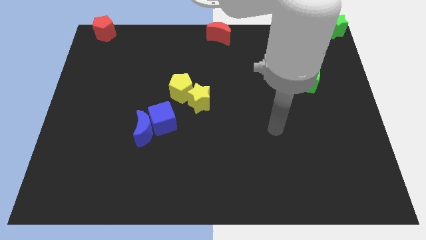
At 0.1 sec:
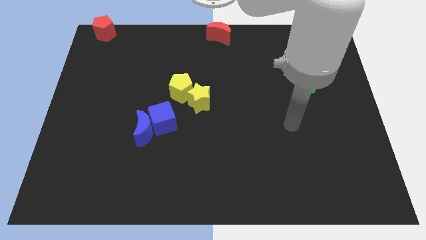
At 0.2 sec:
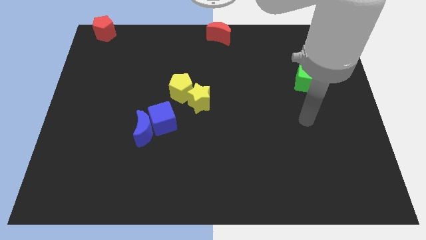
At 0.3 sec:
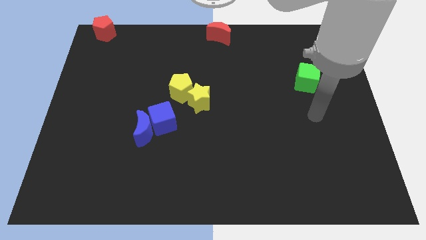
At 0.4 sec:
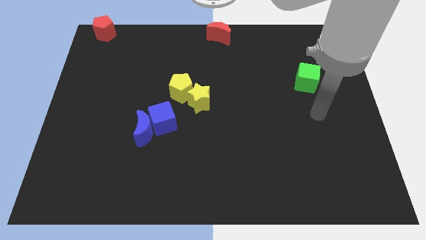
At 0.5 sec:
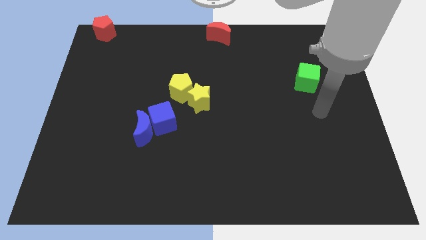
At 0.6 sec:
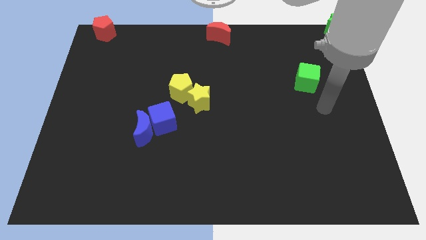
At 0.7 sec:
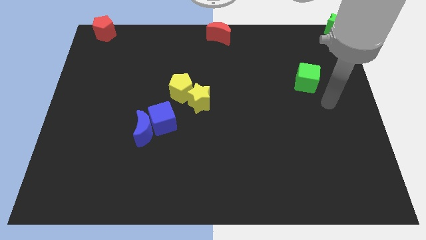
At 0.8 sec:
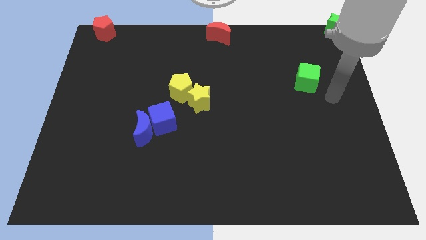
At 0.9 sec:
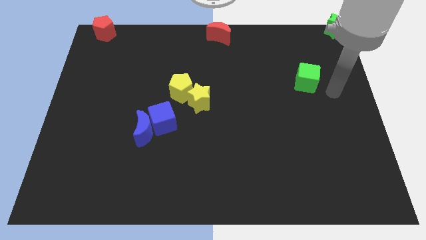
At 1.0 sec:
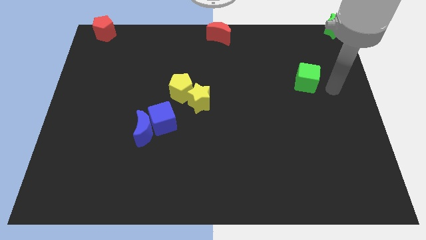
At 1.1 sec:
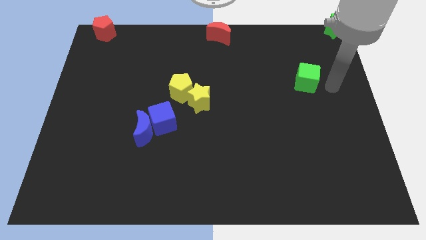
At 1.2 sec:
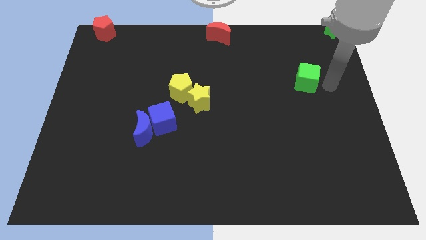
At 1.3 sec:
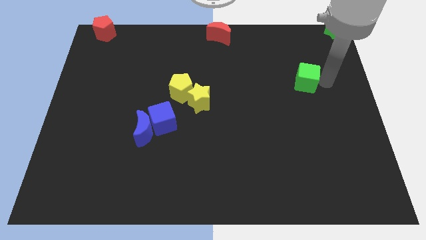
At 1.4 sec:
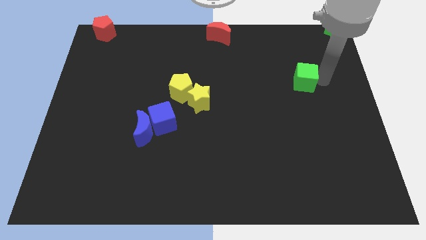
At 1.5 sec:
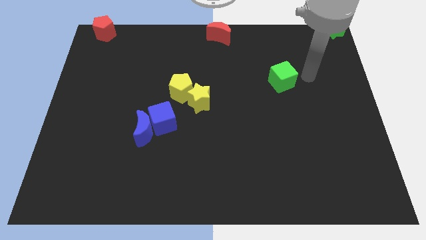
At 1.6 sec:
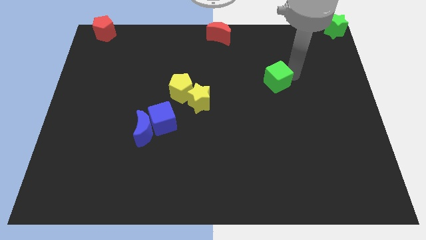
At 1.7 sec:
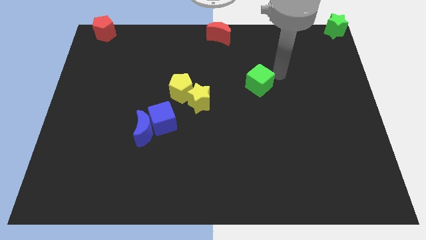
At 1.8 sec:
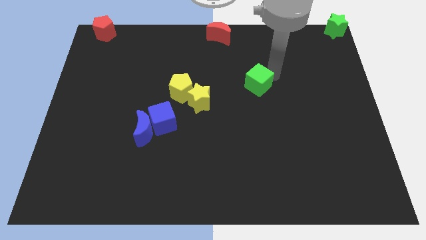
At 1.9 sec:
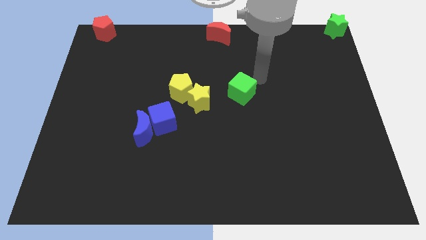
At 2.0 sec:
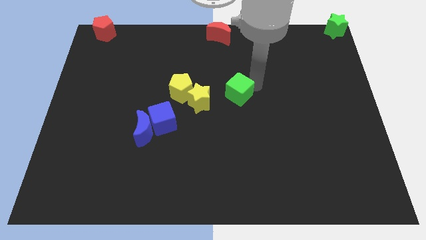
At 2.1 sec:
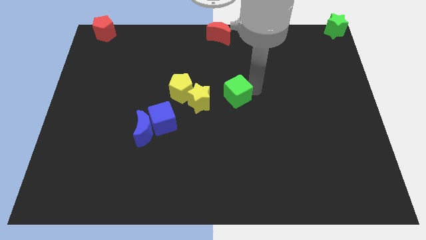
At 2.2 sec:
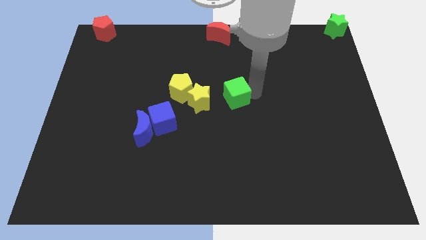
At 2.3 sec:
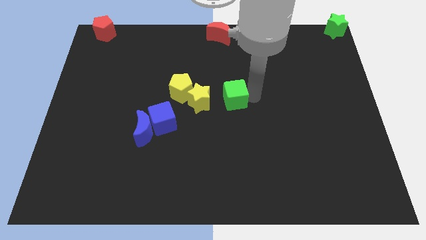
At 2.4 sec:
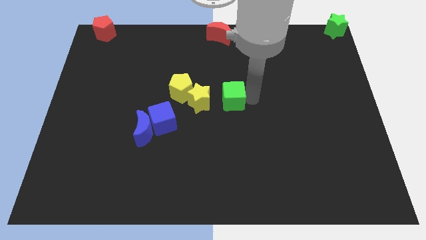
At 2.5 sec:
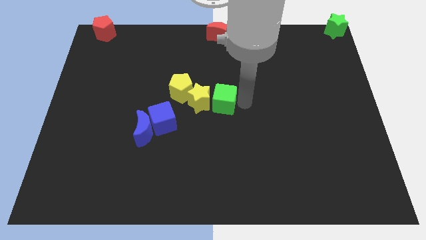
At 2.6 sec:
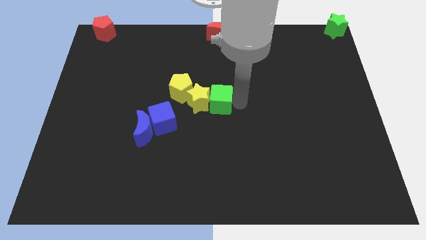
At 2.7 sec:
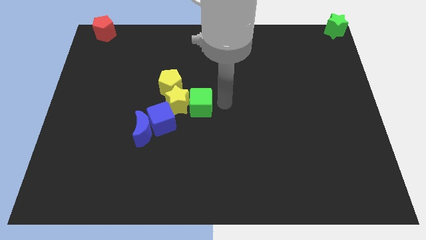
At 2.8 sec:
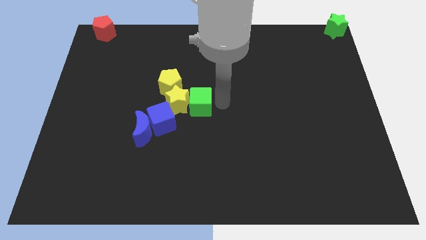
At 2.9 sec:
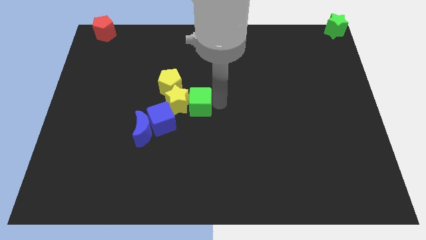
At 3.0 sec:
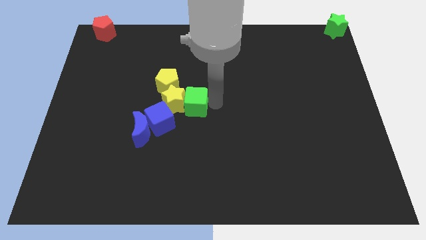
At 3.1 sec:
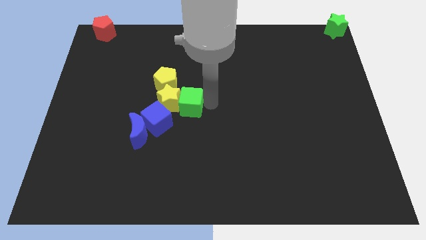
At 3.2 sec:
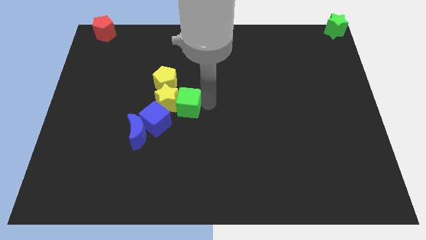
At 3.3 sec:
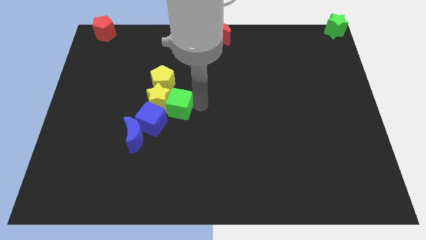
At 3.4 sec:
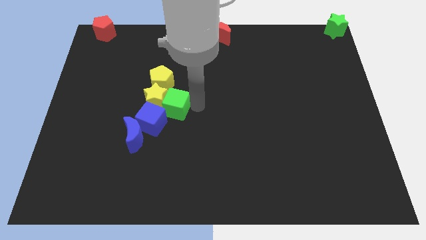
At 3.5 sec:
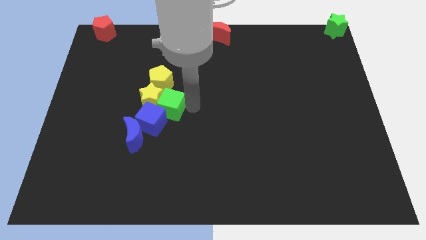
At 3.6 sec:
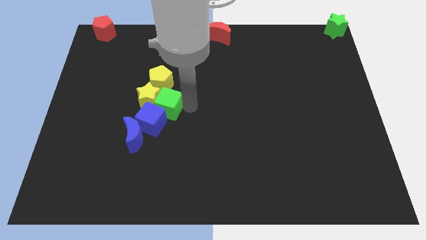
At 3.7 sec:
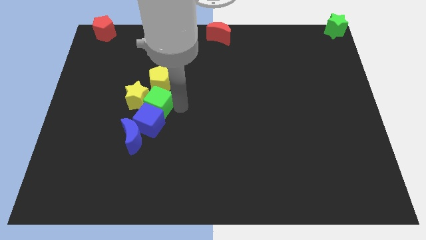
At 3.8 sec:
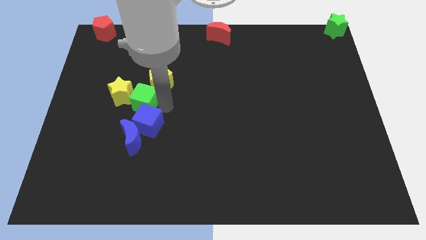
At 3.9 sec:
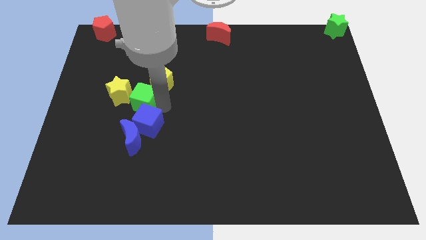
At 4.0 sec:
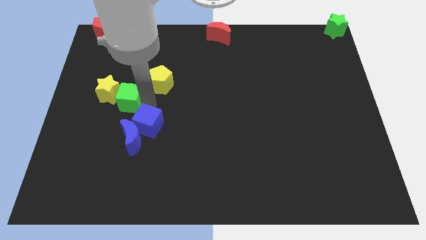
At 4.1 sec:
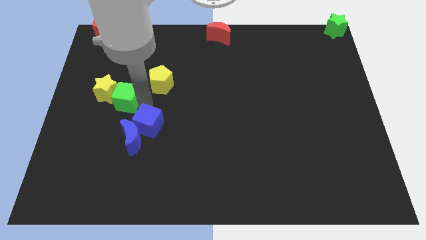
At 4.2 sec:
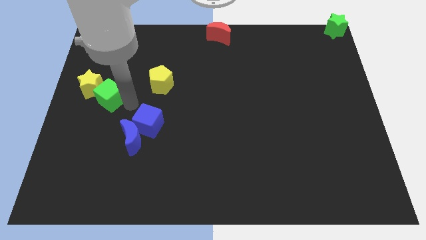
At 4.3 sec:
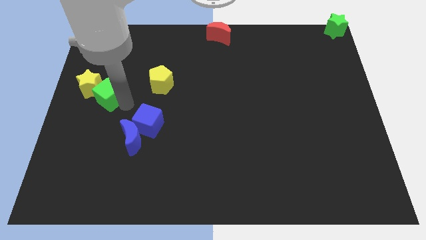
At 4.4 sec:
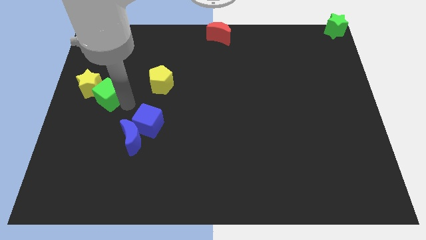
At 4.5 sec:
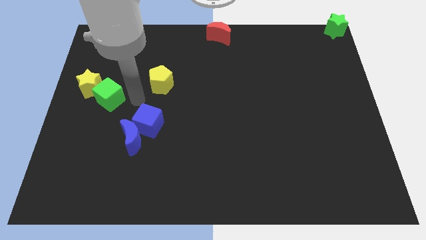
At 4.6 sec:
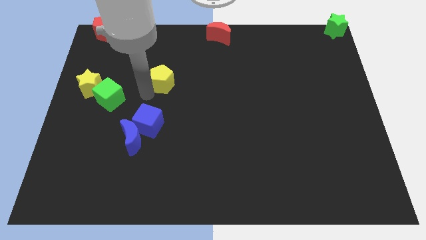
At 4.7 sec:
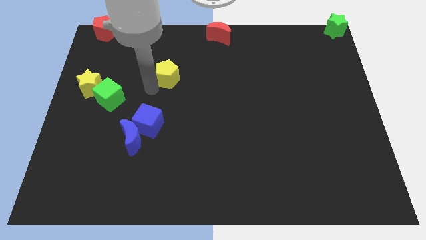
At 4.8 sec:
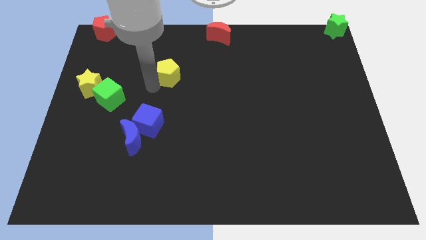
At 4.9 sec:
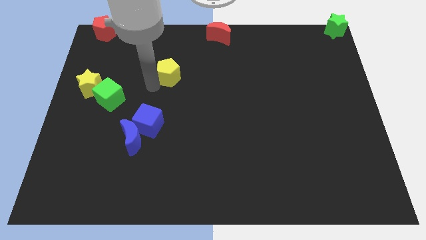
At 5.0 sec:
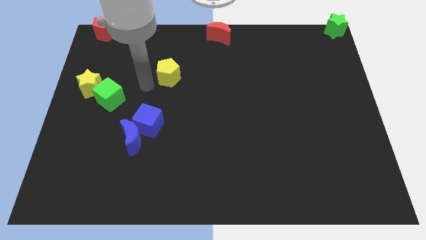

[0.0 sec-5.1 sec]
slide the yellow star and the green cube diagonally top left to the blue moon

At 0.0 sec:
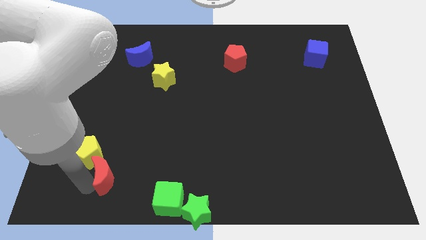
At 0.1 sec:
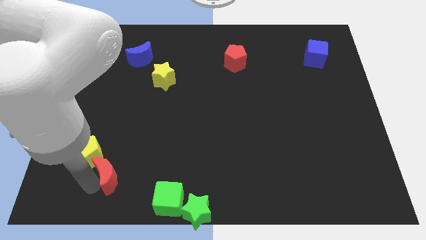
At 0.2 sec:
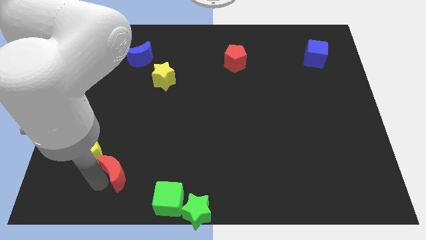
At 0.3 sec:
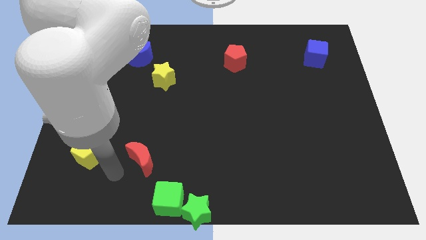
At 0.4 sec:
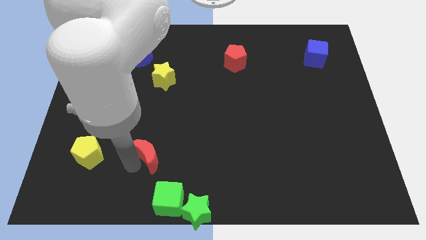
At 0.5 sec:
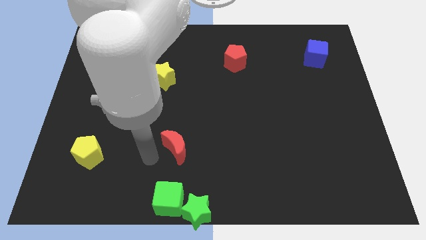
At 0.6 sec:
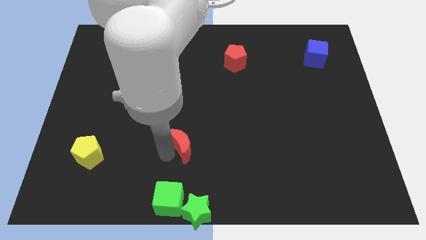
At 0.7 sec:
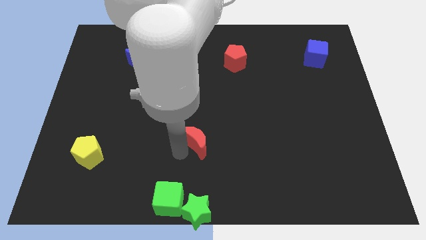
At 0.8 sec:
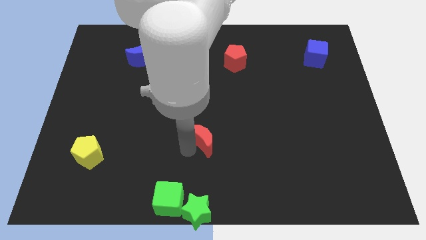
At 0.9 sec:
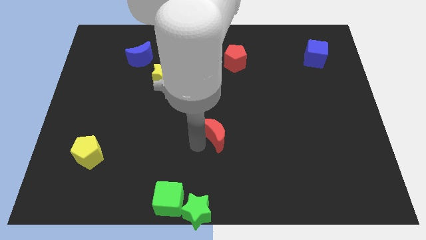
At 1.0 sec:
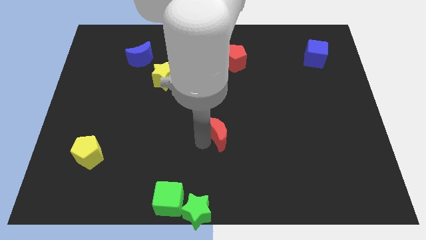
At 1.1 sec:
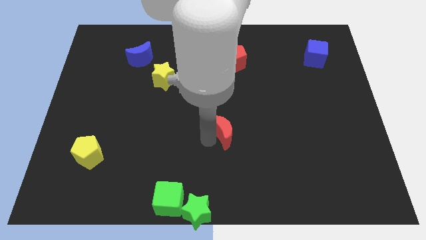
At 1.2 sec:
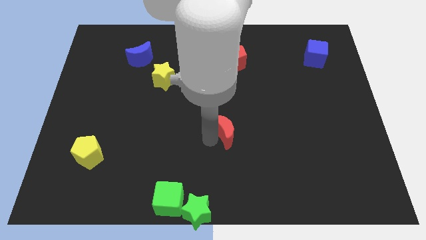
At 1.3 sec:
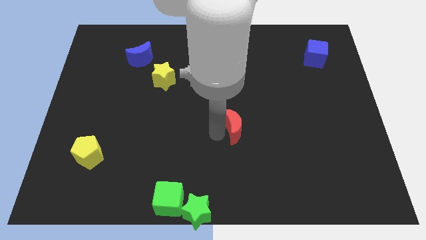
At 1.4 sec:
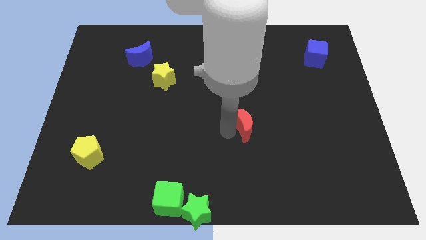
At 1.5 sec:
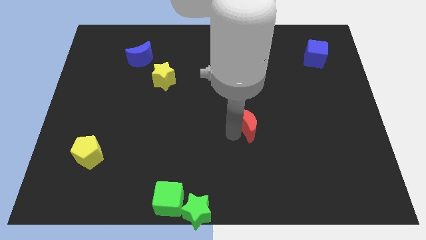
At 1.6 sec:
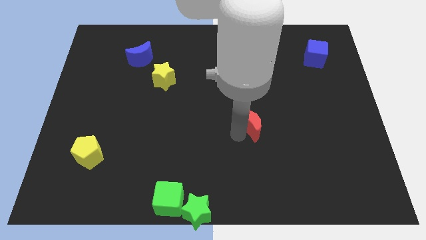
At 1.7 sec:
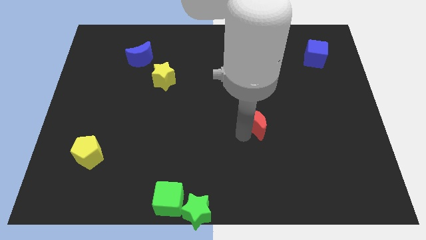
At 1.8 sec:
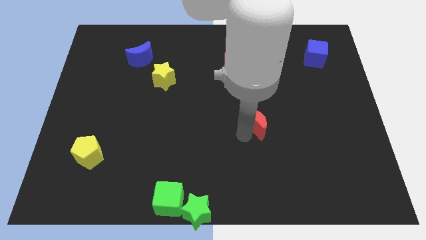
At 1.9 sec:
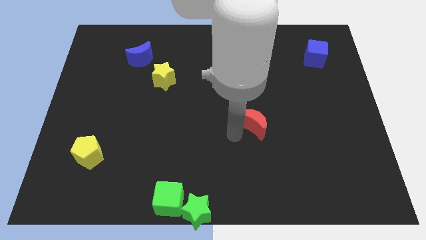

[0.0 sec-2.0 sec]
move the red crescent towards the center right of the board

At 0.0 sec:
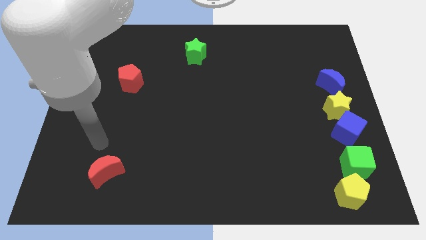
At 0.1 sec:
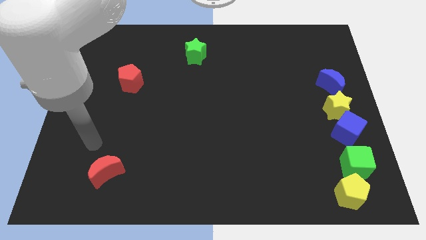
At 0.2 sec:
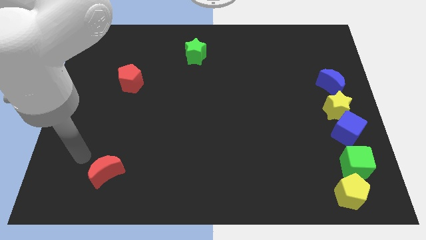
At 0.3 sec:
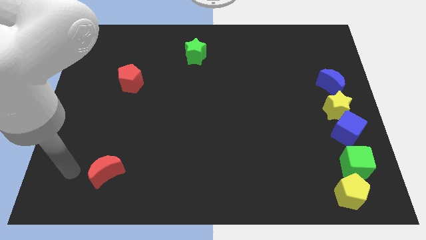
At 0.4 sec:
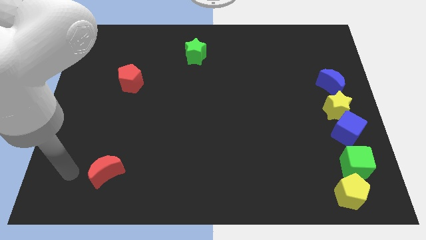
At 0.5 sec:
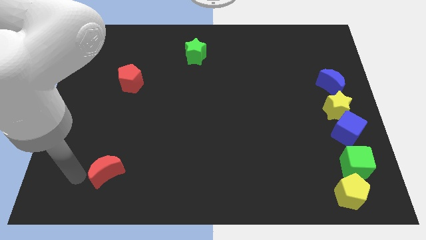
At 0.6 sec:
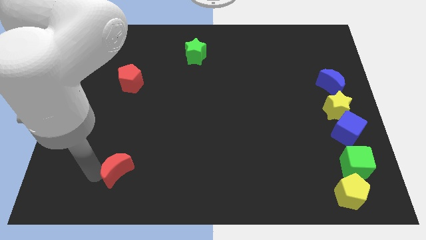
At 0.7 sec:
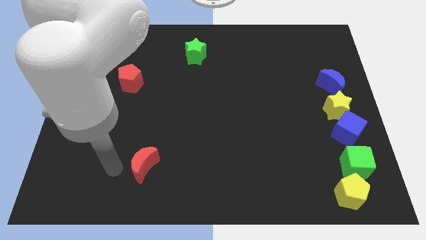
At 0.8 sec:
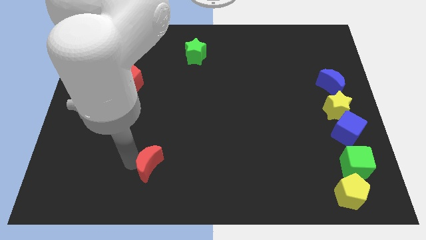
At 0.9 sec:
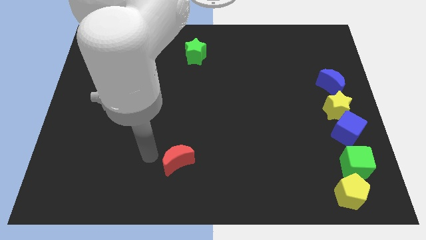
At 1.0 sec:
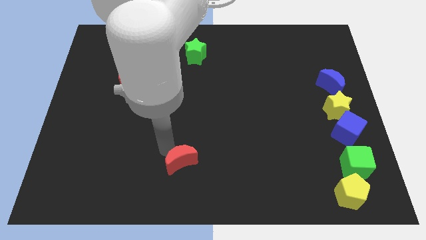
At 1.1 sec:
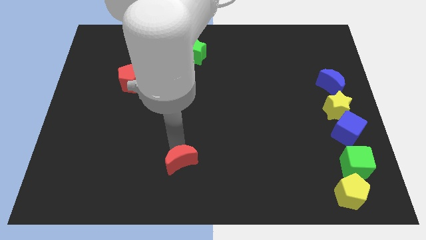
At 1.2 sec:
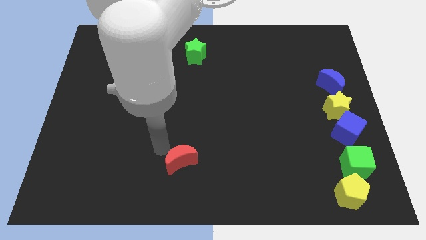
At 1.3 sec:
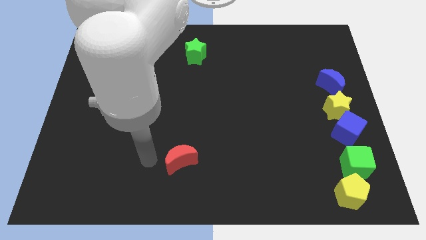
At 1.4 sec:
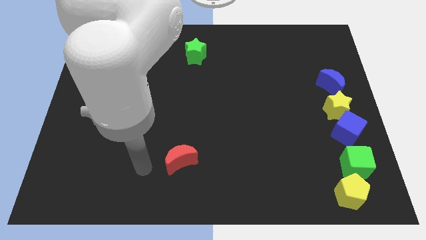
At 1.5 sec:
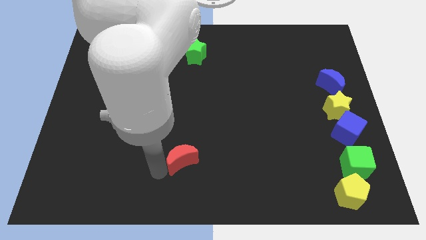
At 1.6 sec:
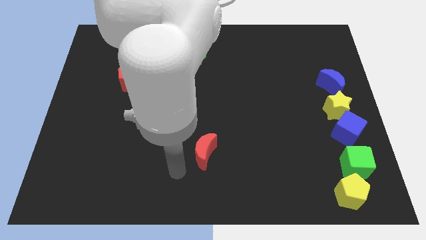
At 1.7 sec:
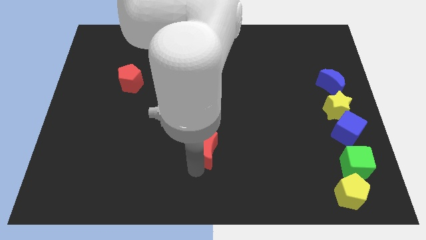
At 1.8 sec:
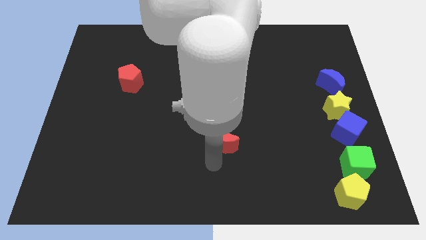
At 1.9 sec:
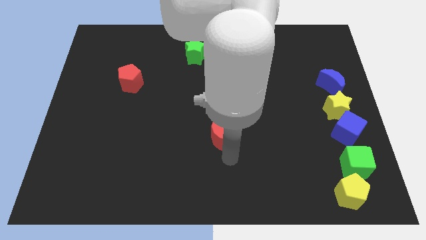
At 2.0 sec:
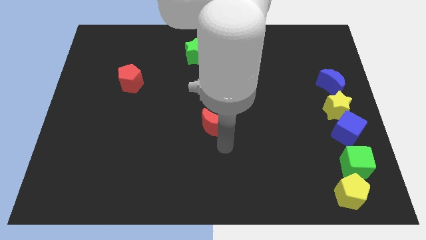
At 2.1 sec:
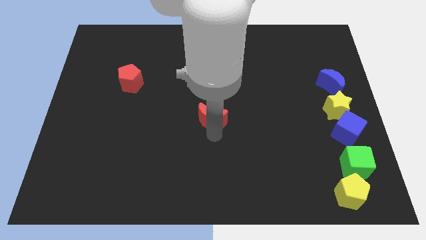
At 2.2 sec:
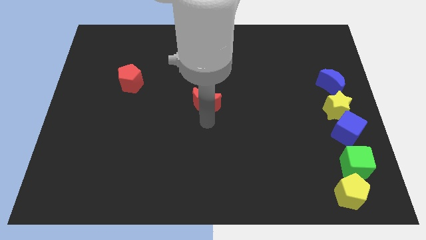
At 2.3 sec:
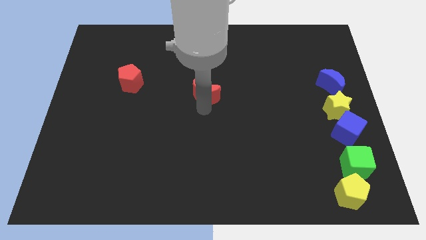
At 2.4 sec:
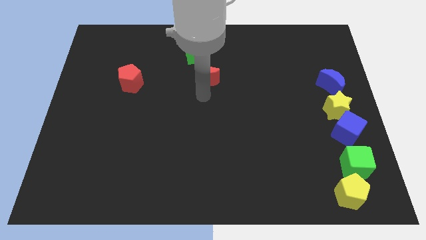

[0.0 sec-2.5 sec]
place the red moon parallel to red pentagon
